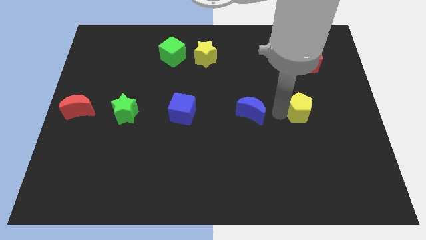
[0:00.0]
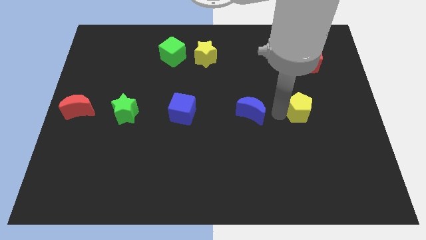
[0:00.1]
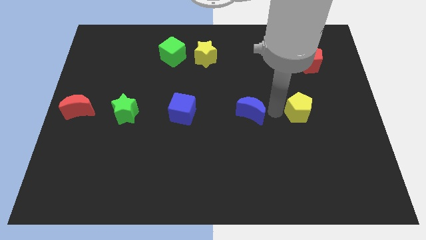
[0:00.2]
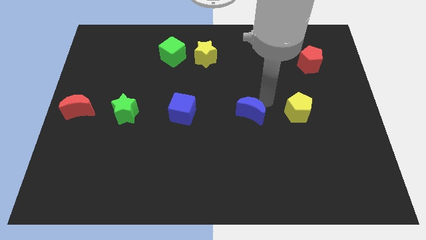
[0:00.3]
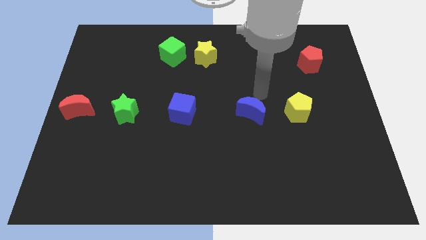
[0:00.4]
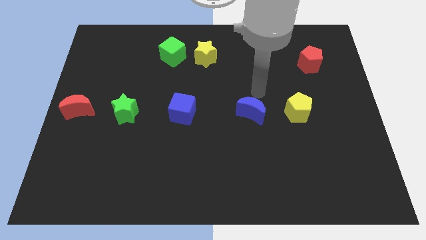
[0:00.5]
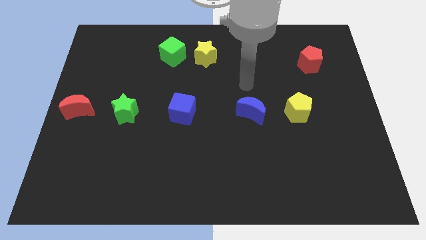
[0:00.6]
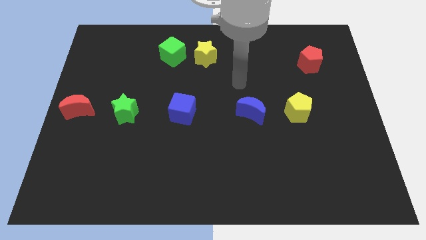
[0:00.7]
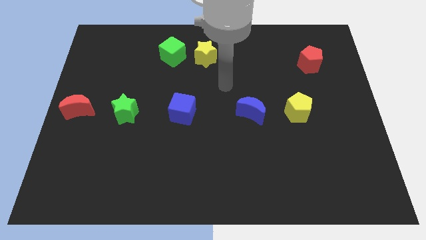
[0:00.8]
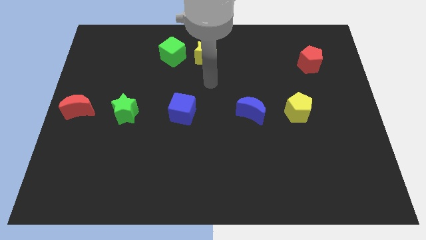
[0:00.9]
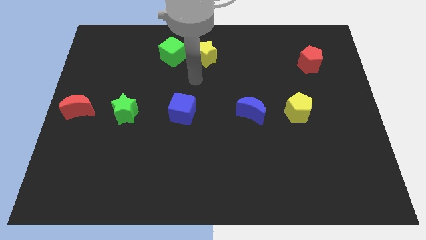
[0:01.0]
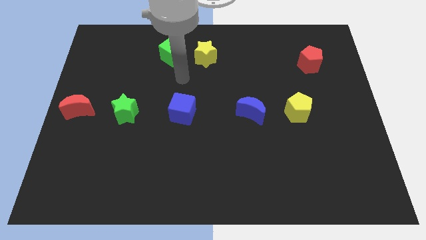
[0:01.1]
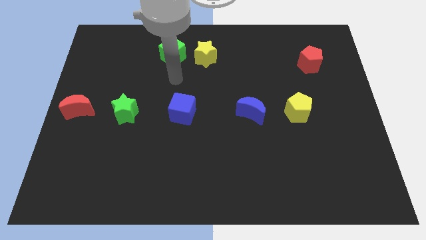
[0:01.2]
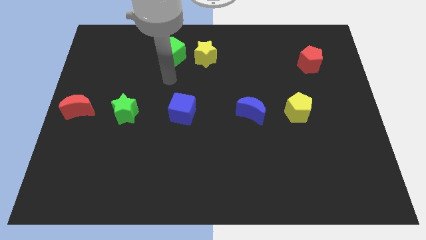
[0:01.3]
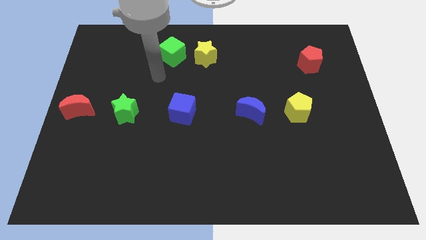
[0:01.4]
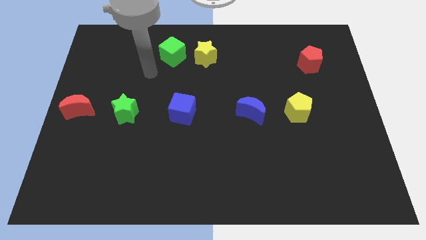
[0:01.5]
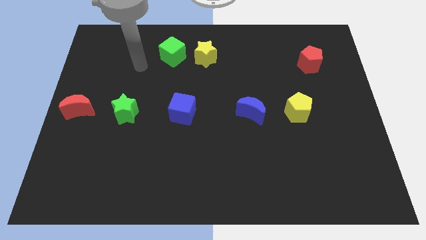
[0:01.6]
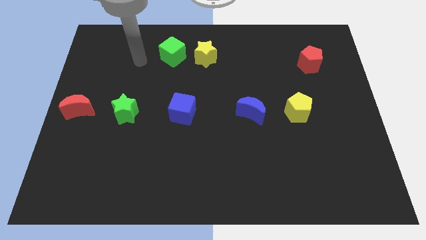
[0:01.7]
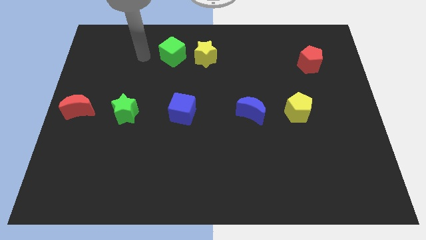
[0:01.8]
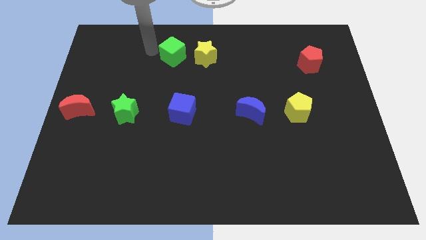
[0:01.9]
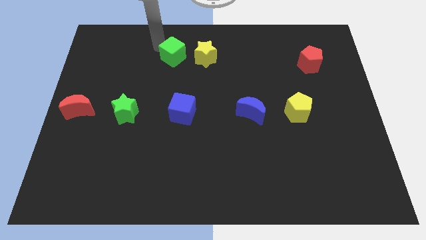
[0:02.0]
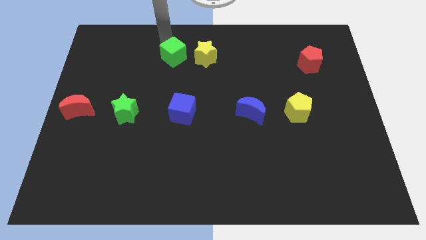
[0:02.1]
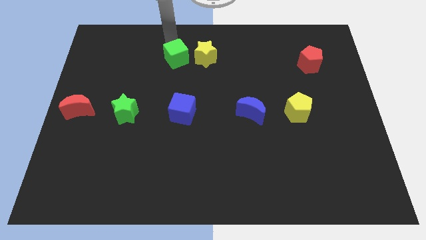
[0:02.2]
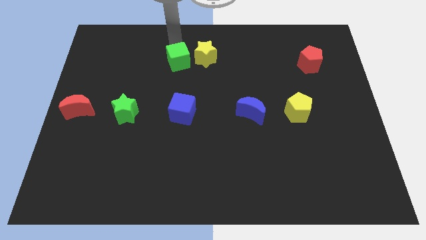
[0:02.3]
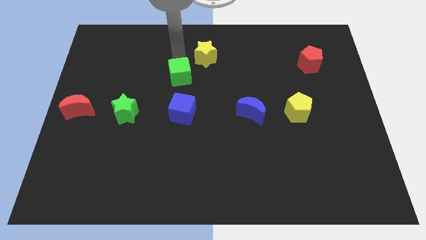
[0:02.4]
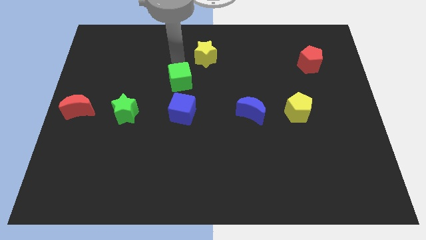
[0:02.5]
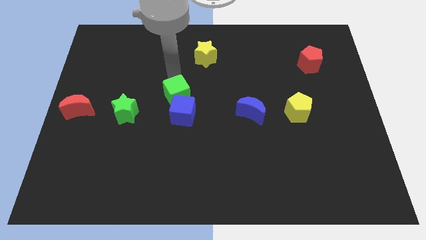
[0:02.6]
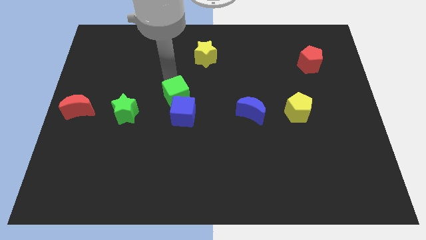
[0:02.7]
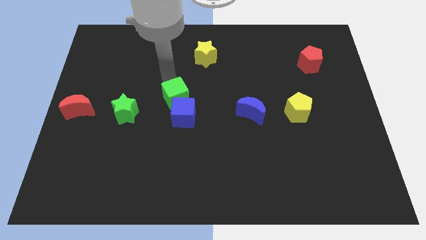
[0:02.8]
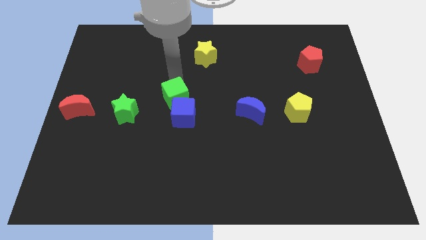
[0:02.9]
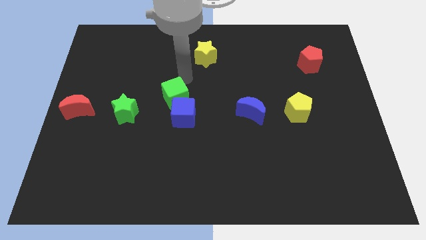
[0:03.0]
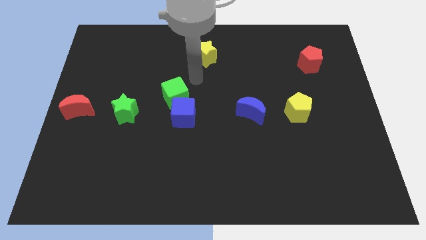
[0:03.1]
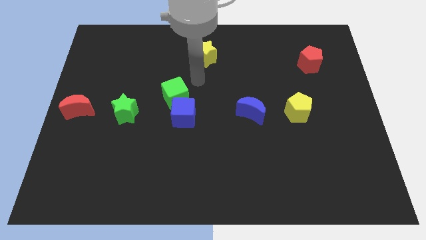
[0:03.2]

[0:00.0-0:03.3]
push the green cube into the blue cube

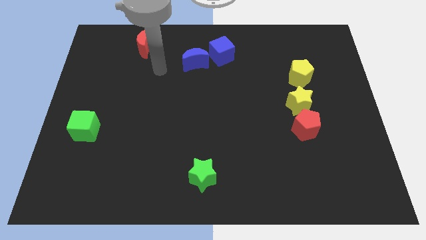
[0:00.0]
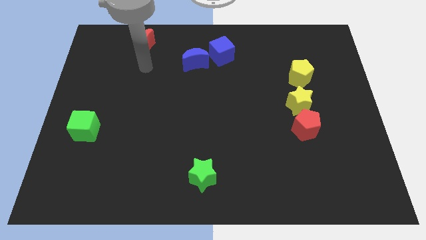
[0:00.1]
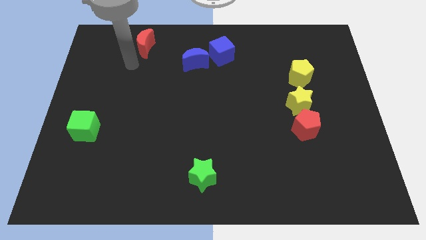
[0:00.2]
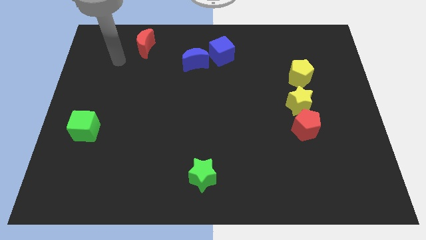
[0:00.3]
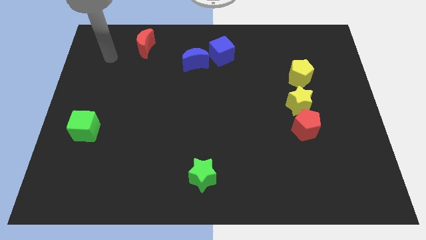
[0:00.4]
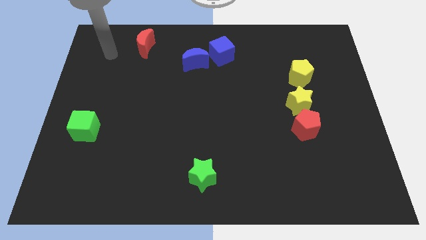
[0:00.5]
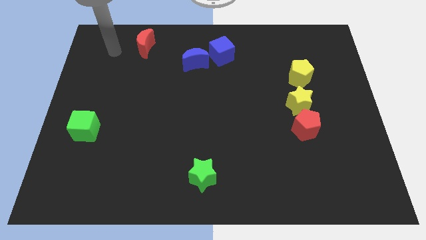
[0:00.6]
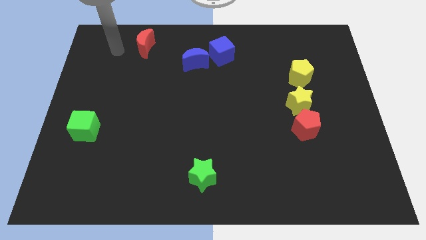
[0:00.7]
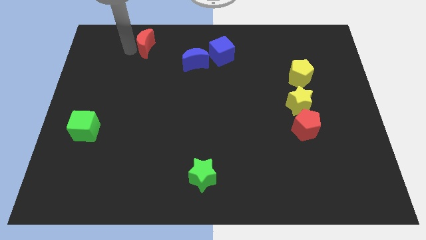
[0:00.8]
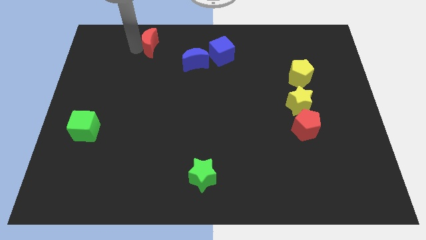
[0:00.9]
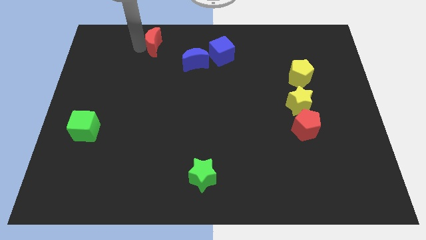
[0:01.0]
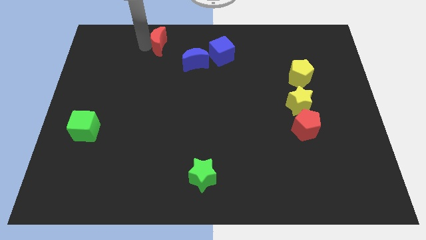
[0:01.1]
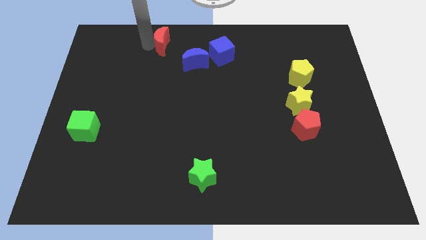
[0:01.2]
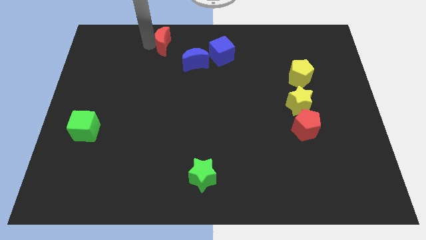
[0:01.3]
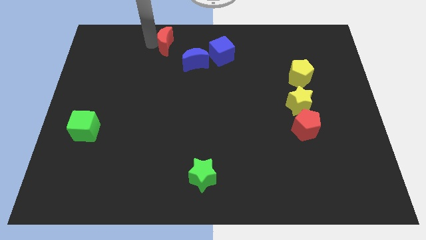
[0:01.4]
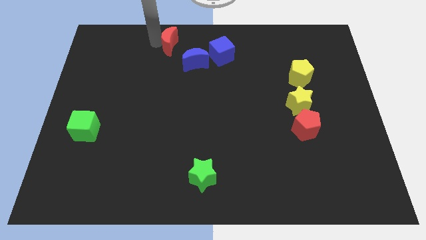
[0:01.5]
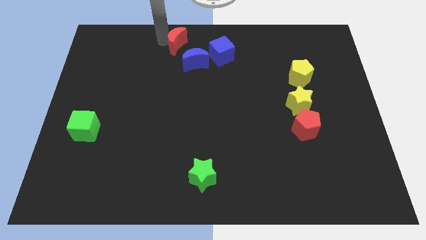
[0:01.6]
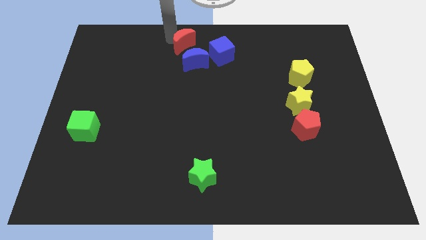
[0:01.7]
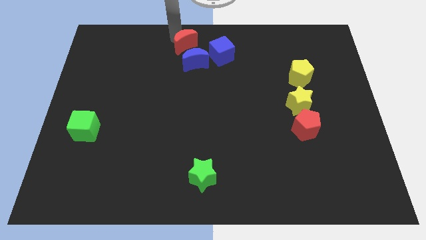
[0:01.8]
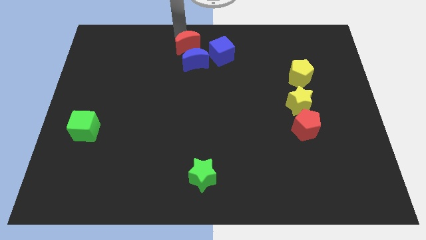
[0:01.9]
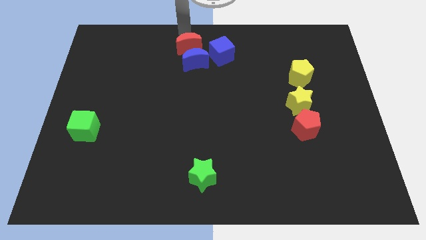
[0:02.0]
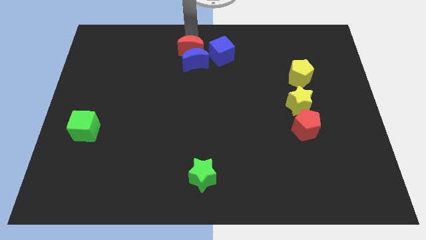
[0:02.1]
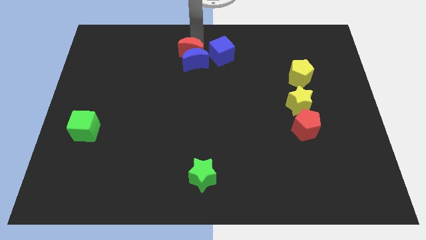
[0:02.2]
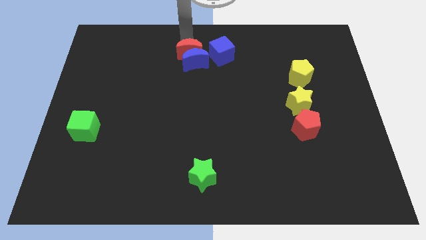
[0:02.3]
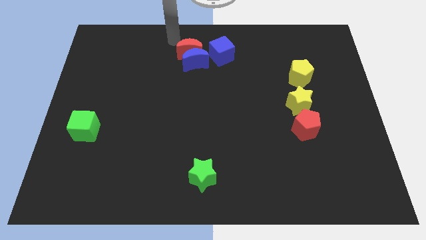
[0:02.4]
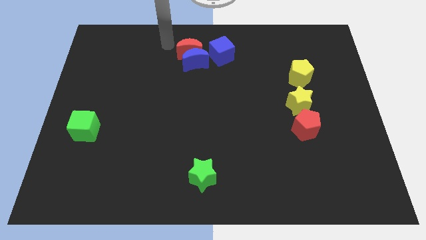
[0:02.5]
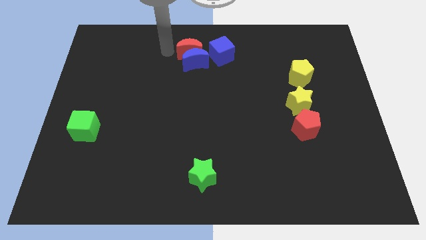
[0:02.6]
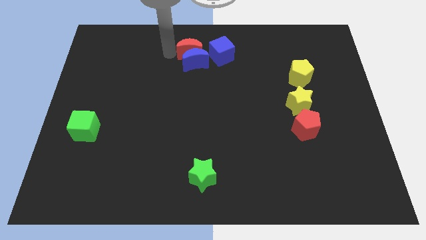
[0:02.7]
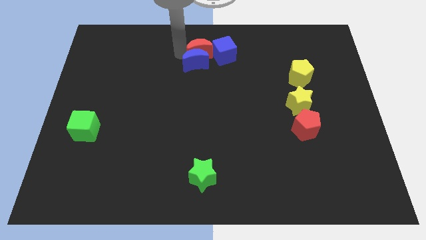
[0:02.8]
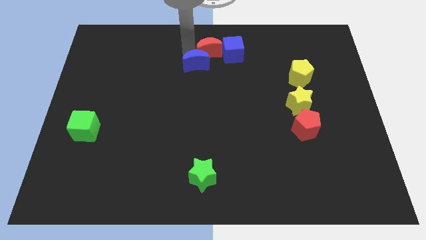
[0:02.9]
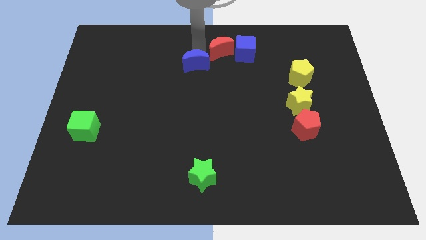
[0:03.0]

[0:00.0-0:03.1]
push red moon in to blue cube

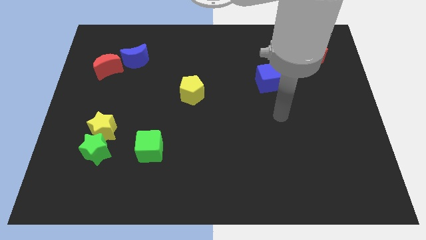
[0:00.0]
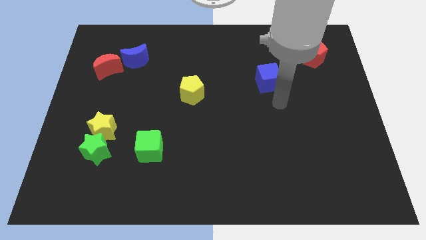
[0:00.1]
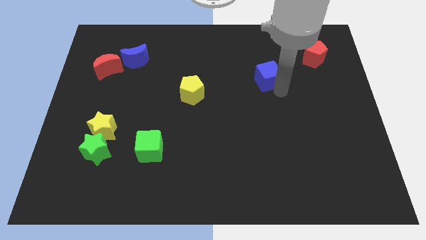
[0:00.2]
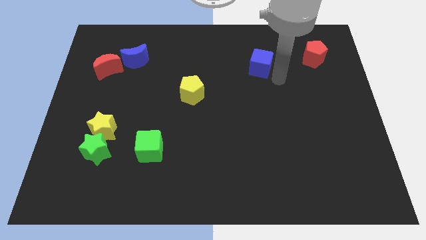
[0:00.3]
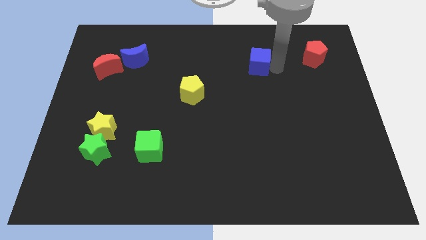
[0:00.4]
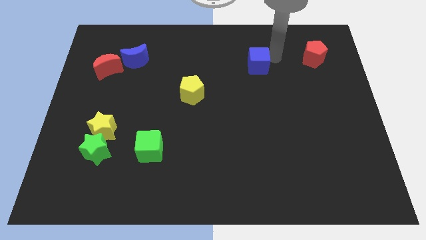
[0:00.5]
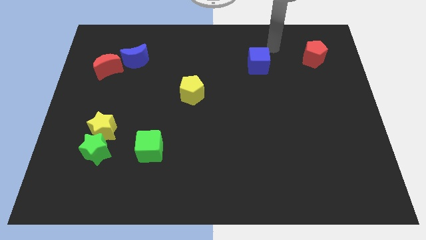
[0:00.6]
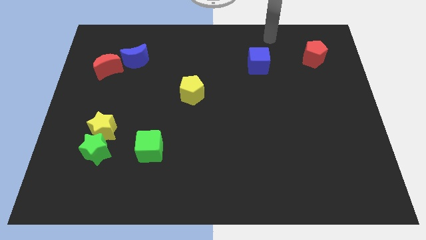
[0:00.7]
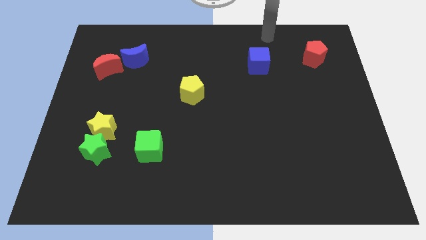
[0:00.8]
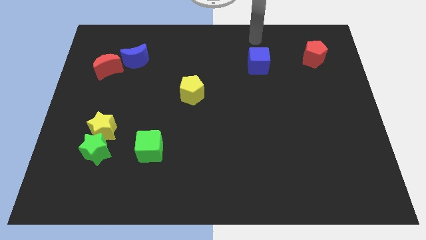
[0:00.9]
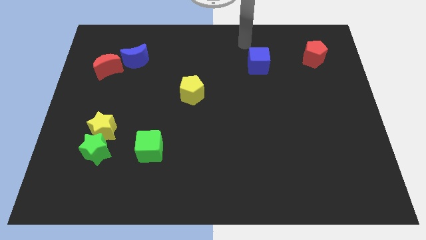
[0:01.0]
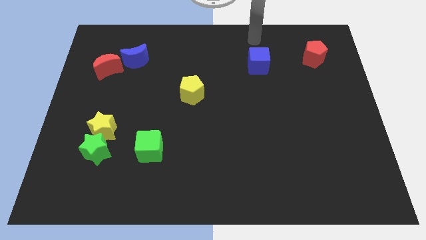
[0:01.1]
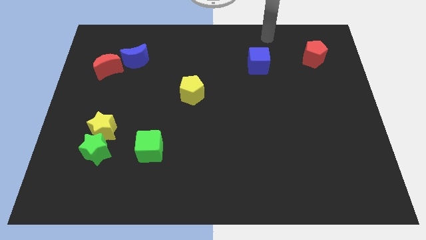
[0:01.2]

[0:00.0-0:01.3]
push the blue cube upwards

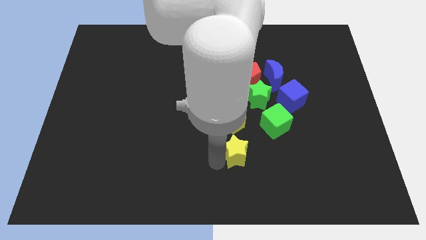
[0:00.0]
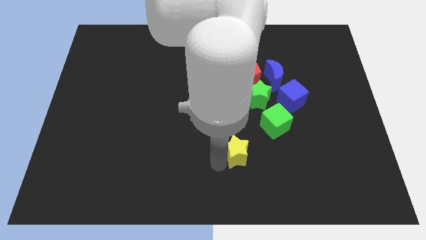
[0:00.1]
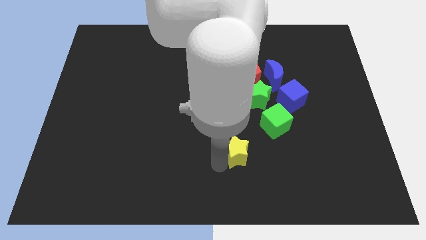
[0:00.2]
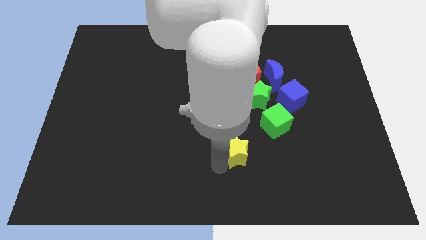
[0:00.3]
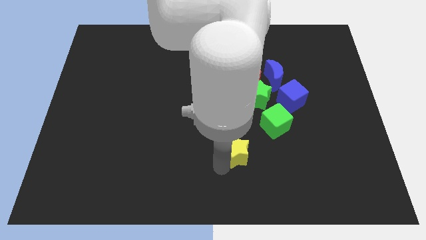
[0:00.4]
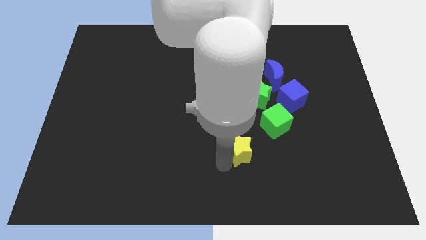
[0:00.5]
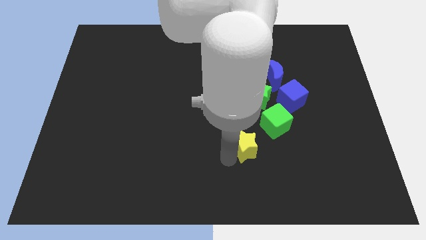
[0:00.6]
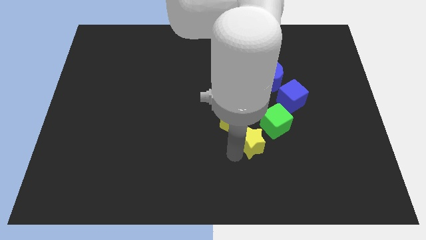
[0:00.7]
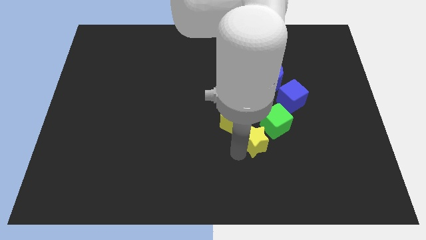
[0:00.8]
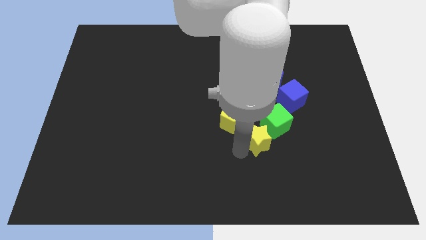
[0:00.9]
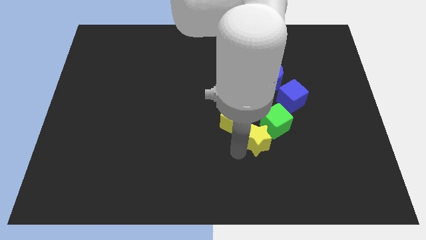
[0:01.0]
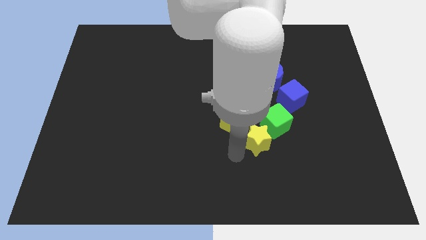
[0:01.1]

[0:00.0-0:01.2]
place the yellow star at the bottom left of the green cube
